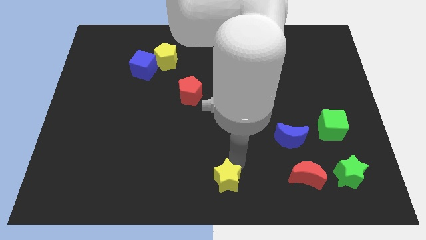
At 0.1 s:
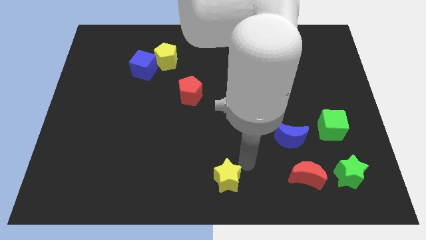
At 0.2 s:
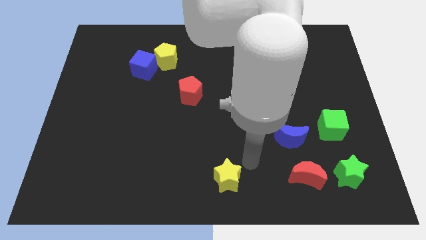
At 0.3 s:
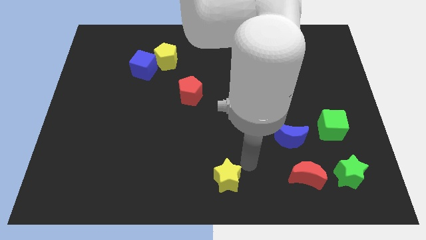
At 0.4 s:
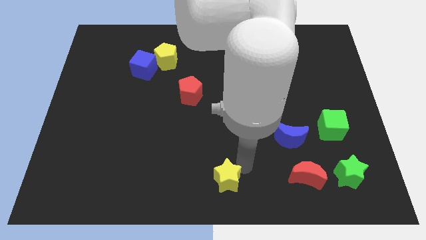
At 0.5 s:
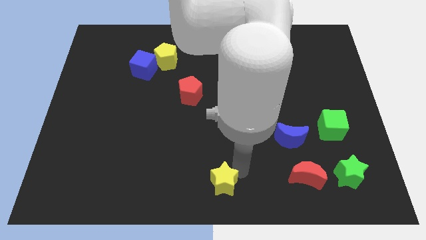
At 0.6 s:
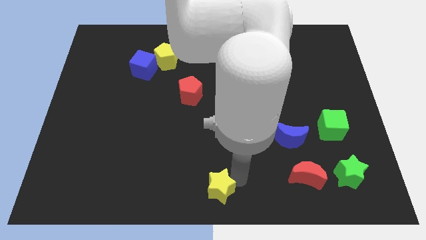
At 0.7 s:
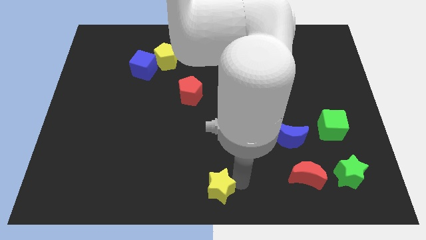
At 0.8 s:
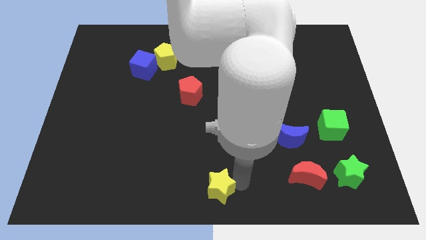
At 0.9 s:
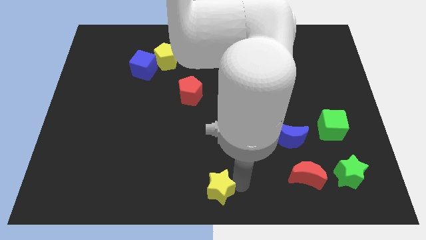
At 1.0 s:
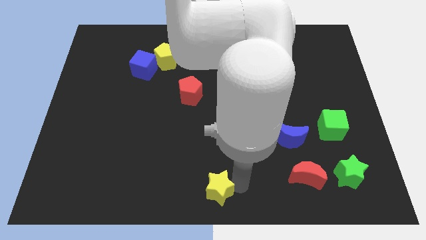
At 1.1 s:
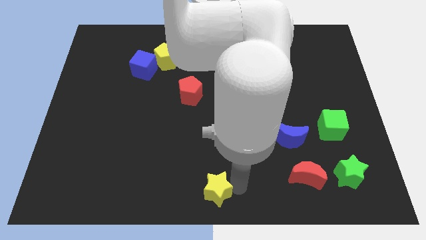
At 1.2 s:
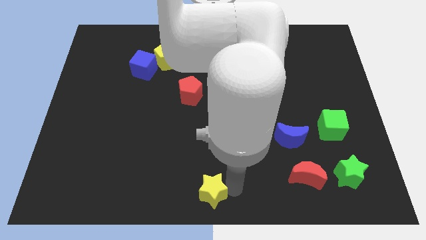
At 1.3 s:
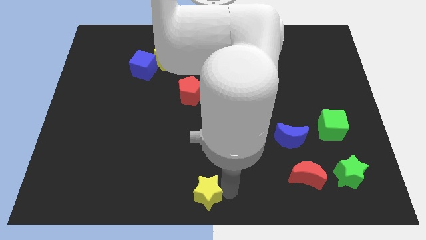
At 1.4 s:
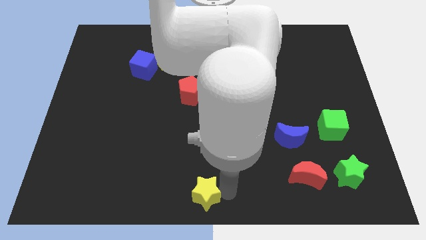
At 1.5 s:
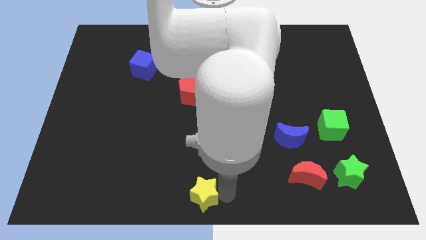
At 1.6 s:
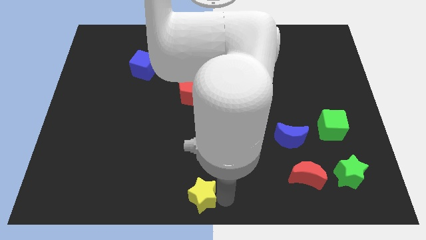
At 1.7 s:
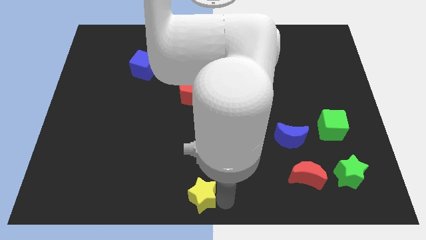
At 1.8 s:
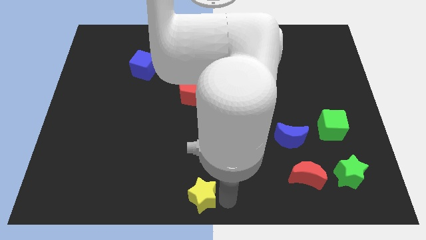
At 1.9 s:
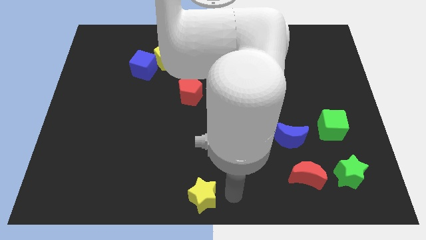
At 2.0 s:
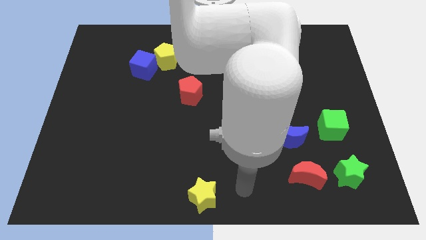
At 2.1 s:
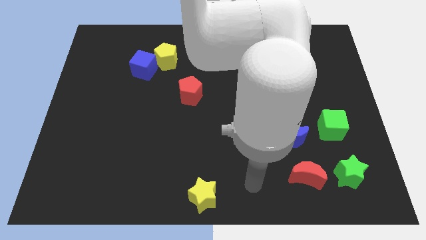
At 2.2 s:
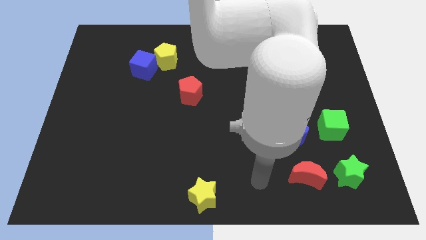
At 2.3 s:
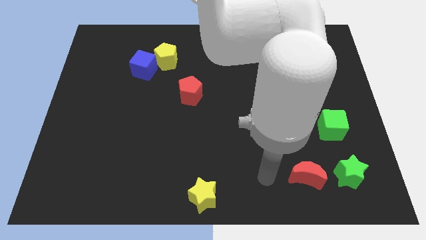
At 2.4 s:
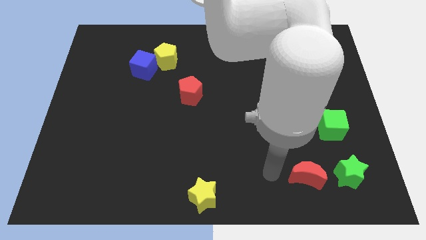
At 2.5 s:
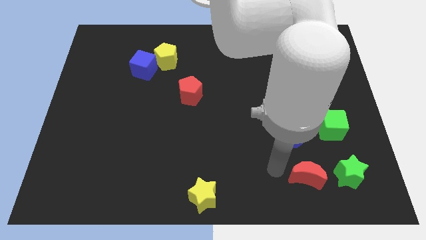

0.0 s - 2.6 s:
place the yellow star to the bottom center of the board

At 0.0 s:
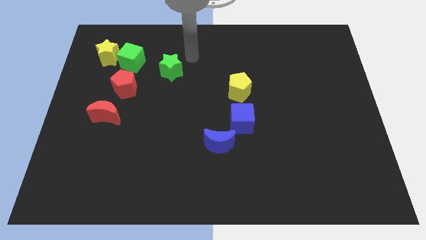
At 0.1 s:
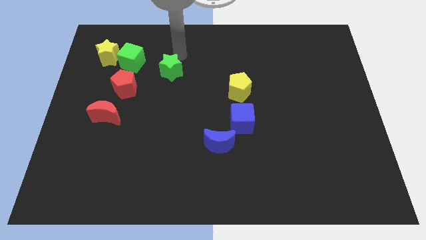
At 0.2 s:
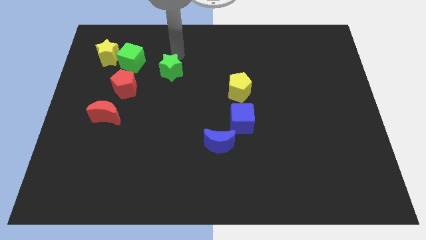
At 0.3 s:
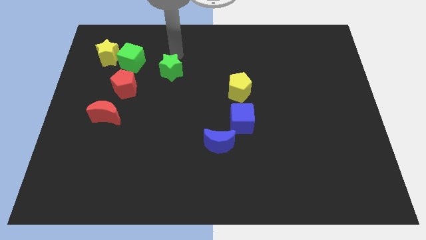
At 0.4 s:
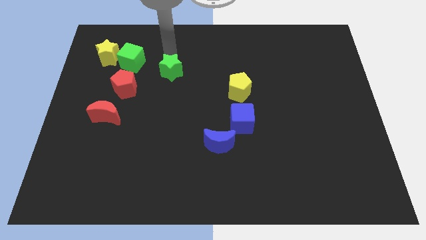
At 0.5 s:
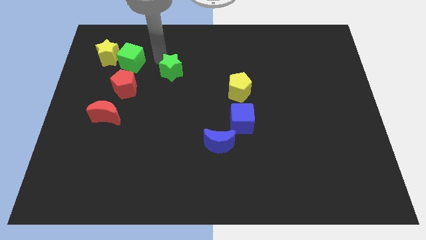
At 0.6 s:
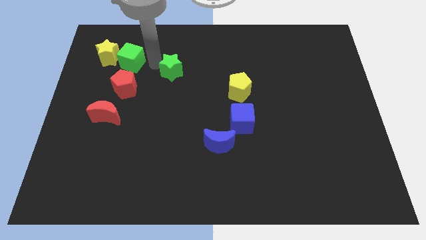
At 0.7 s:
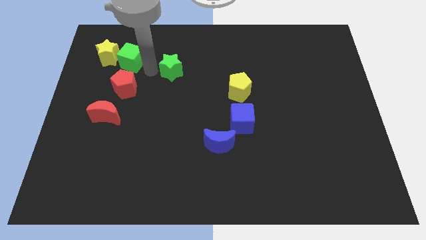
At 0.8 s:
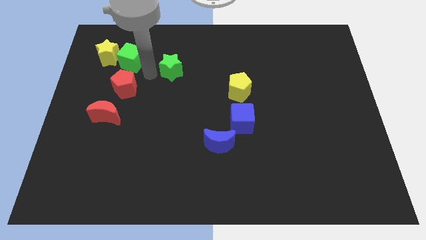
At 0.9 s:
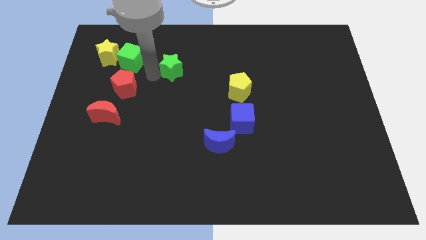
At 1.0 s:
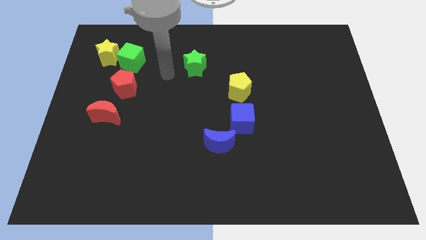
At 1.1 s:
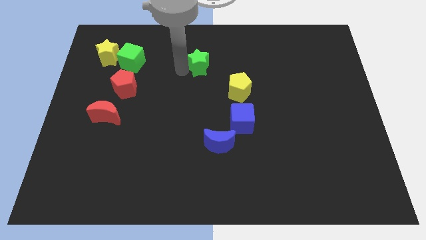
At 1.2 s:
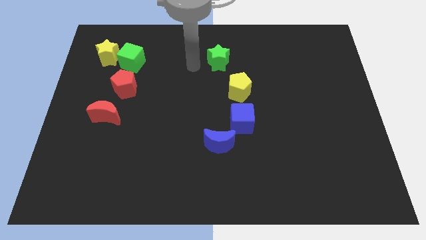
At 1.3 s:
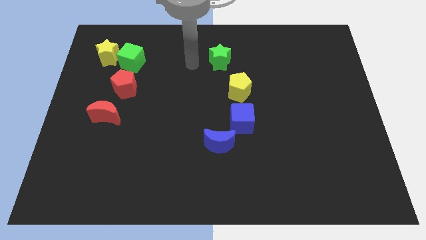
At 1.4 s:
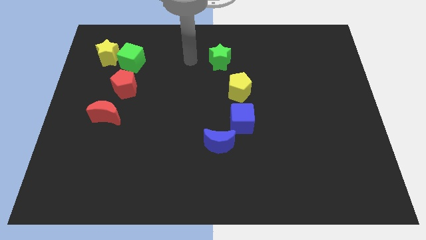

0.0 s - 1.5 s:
move the green star towards the right side

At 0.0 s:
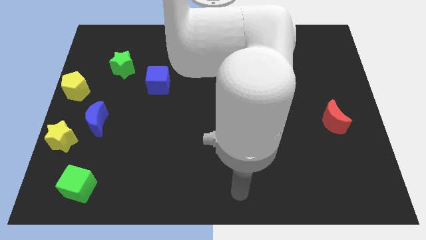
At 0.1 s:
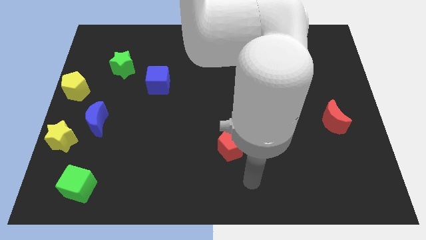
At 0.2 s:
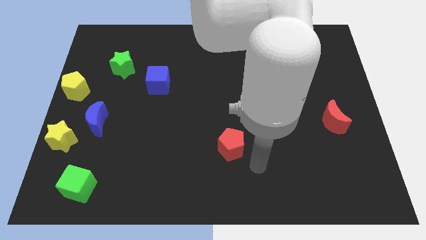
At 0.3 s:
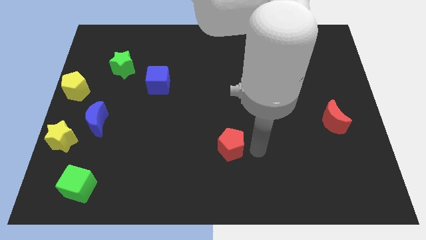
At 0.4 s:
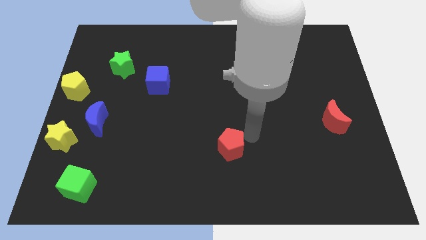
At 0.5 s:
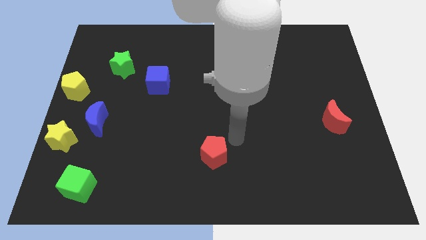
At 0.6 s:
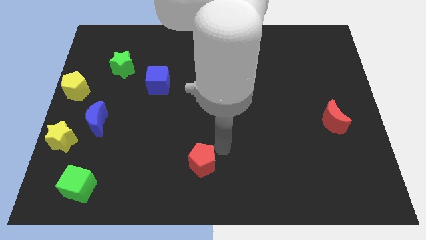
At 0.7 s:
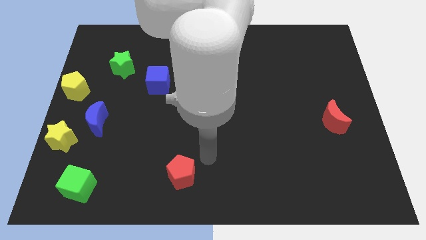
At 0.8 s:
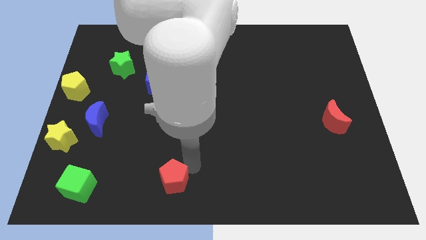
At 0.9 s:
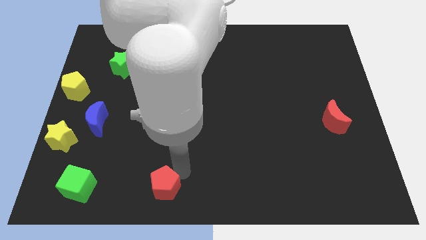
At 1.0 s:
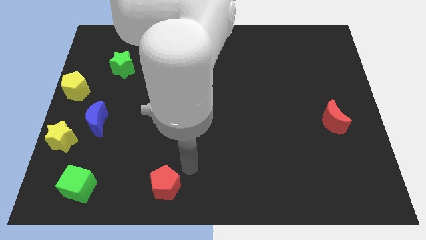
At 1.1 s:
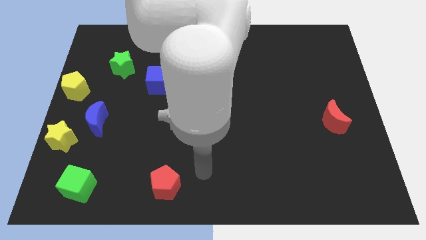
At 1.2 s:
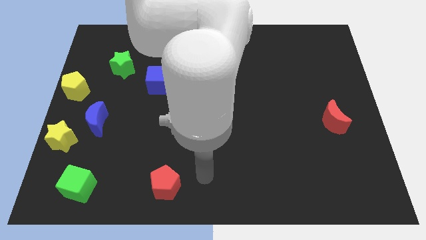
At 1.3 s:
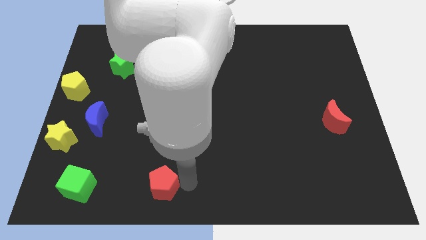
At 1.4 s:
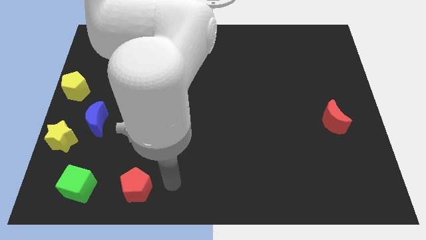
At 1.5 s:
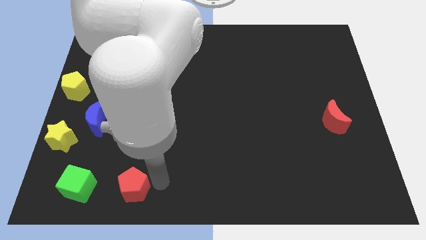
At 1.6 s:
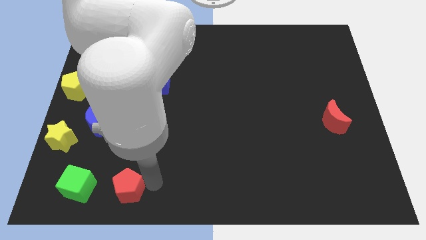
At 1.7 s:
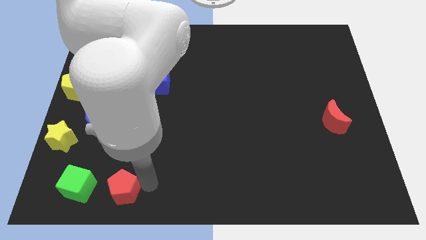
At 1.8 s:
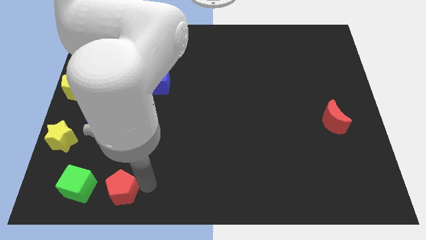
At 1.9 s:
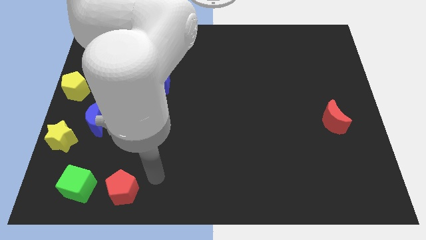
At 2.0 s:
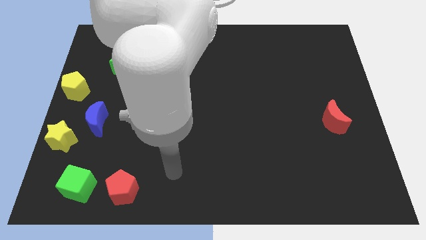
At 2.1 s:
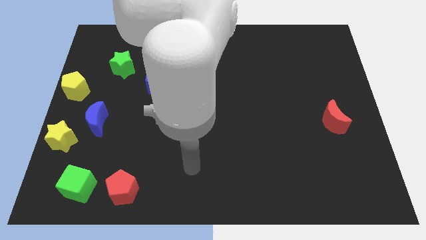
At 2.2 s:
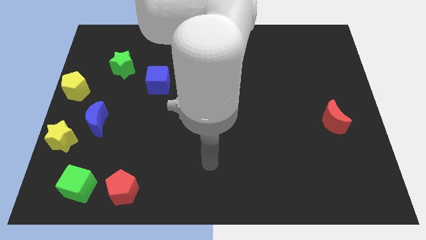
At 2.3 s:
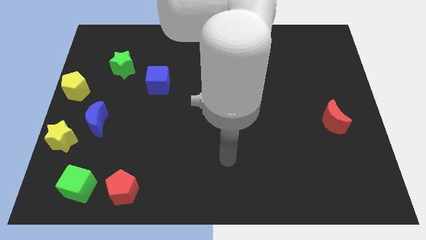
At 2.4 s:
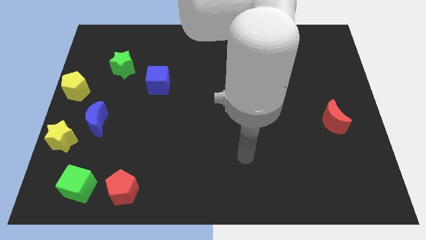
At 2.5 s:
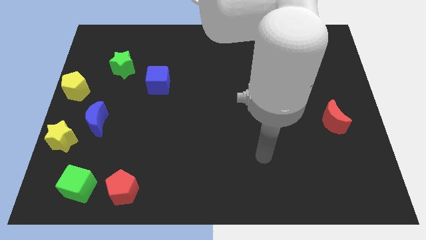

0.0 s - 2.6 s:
place the red pentagon to the right of the green cube

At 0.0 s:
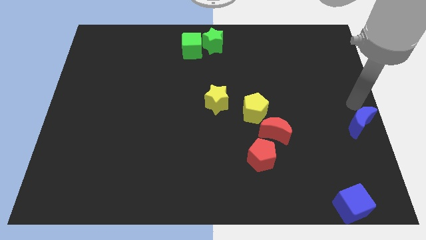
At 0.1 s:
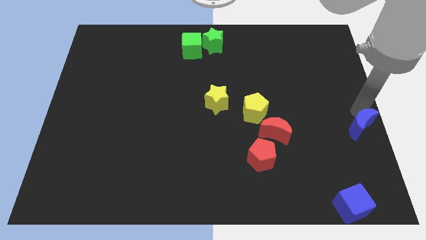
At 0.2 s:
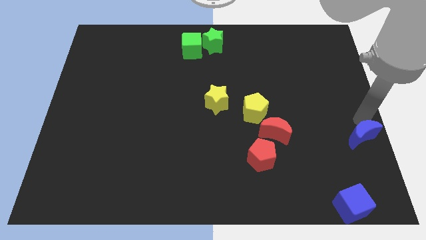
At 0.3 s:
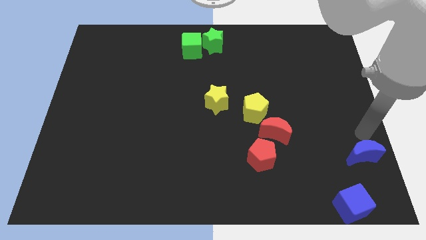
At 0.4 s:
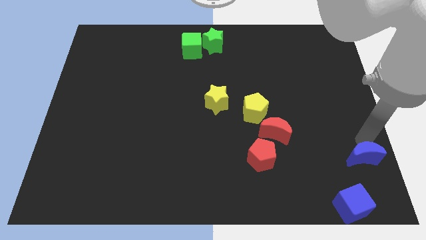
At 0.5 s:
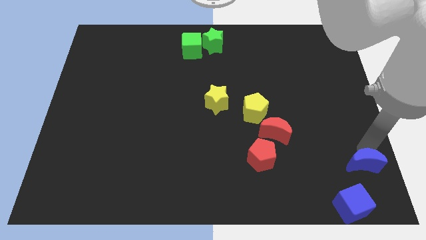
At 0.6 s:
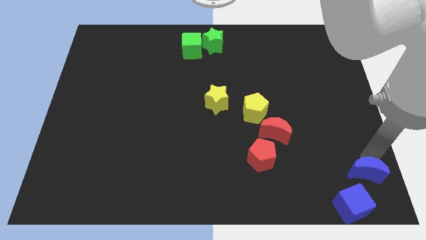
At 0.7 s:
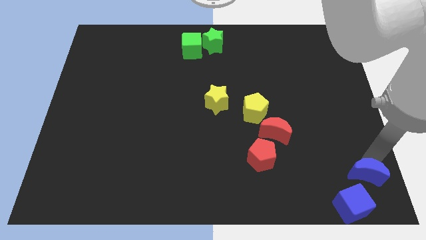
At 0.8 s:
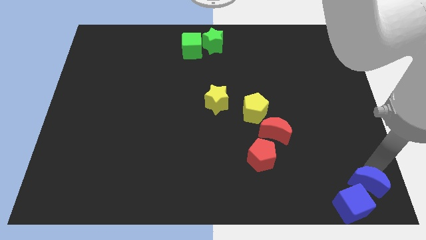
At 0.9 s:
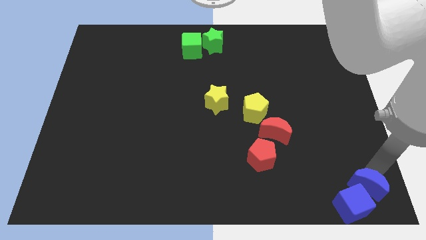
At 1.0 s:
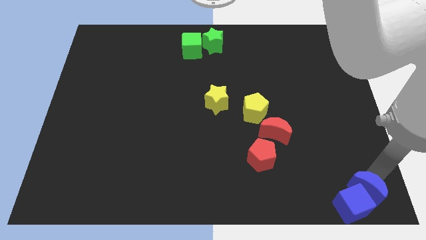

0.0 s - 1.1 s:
add blue moon into blue cube

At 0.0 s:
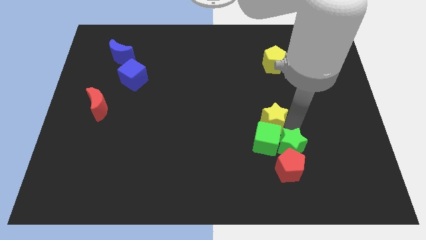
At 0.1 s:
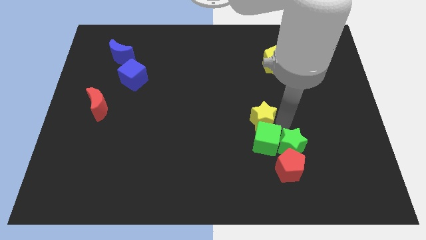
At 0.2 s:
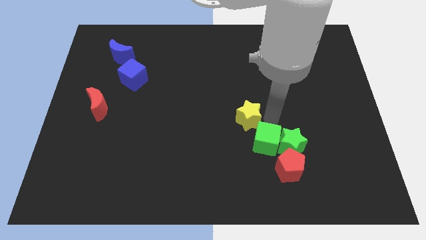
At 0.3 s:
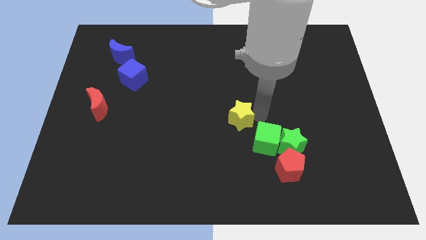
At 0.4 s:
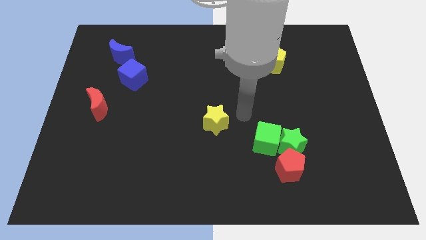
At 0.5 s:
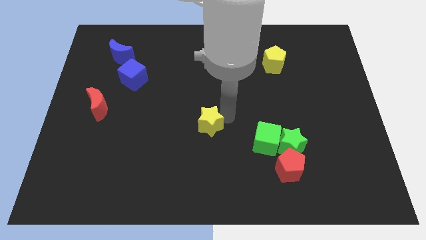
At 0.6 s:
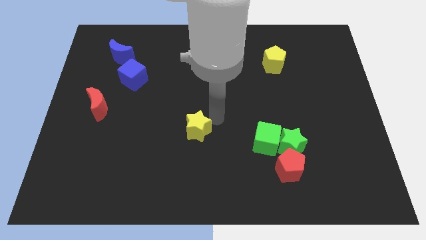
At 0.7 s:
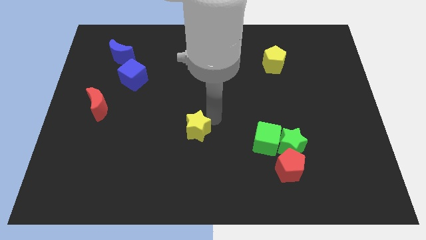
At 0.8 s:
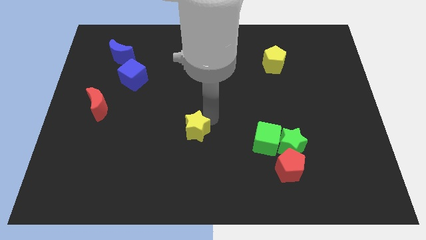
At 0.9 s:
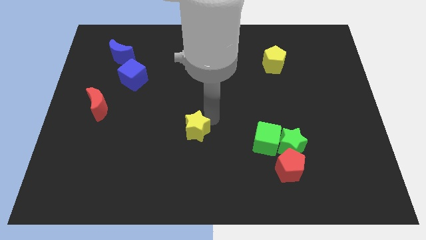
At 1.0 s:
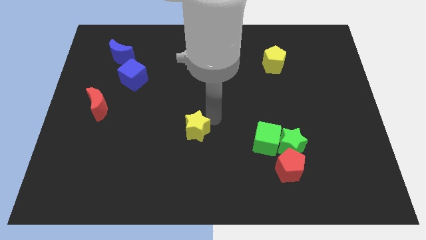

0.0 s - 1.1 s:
drag the yellow star towards the center of the board
